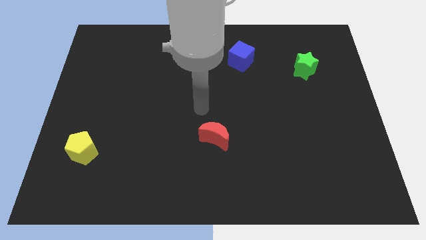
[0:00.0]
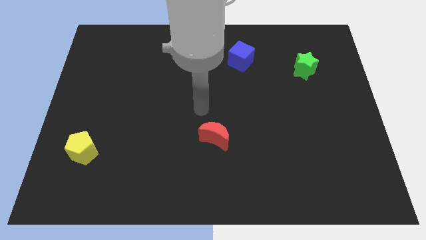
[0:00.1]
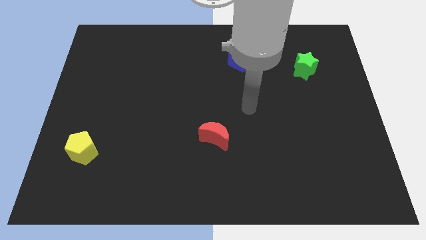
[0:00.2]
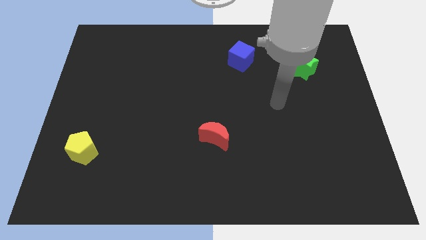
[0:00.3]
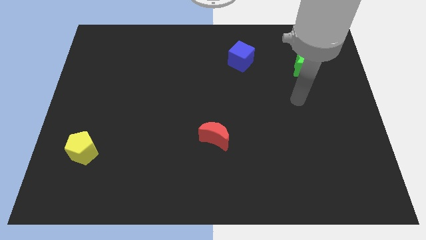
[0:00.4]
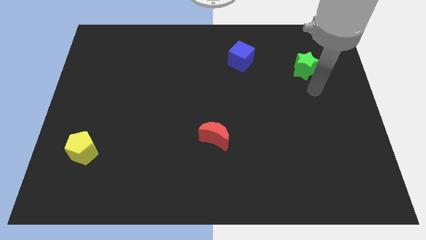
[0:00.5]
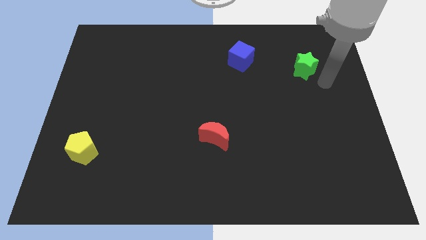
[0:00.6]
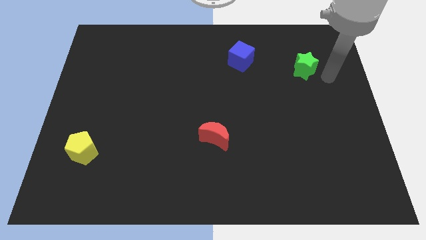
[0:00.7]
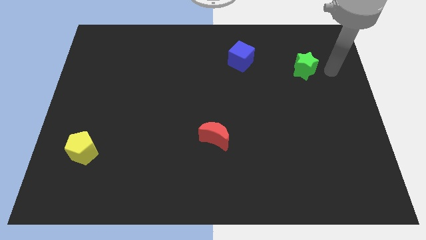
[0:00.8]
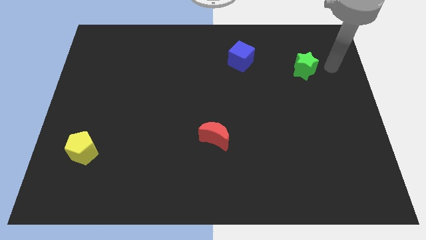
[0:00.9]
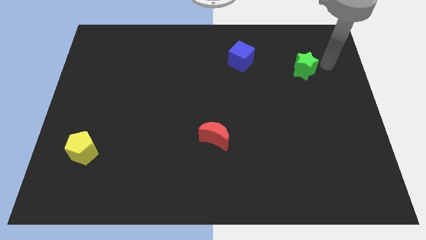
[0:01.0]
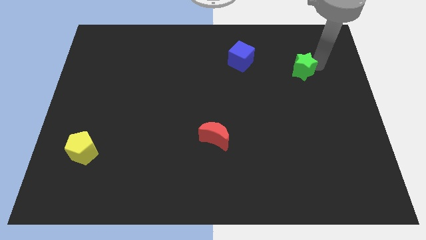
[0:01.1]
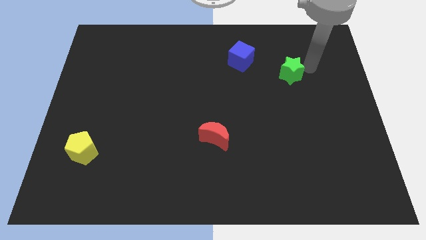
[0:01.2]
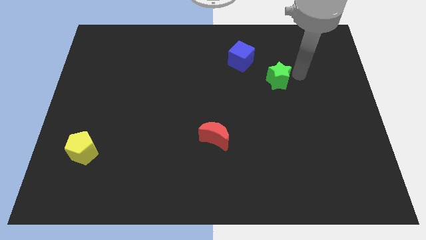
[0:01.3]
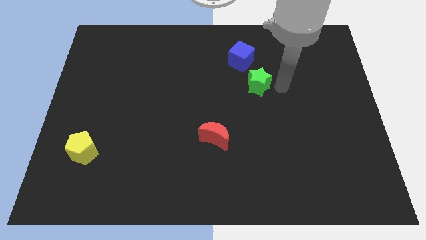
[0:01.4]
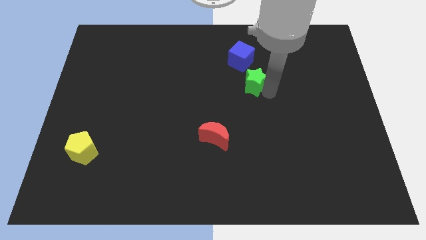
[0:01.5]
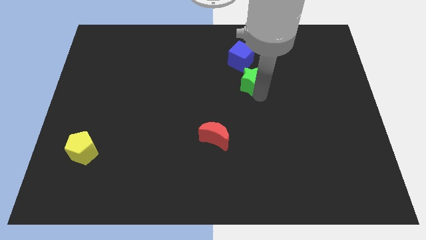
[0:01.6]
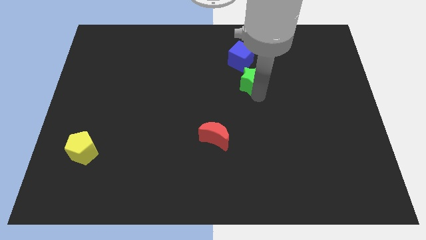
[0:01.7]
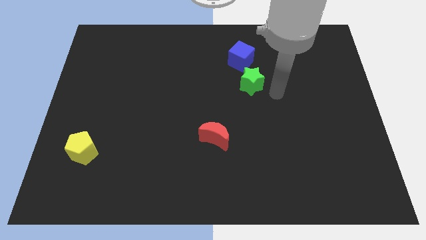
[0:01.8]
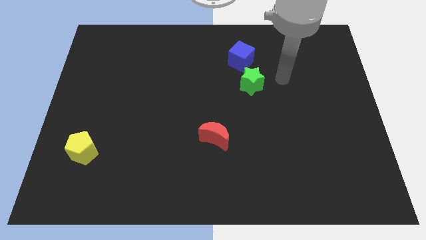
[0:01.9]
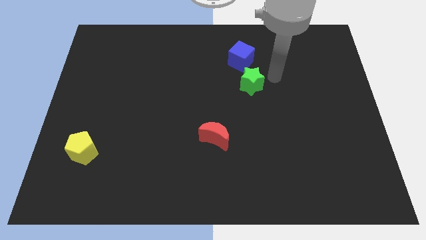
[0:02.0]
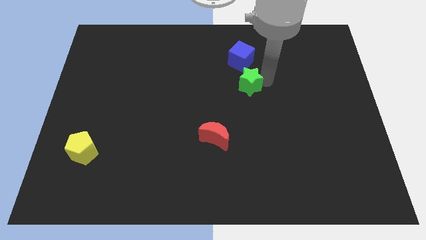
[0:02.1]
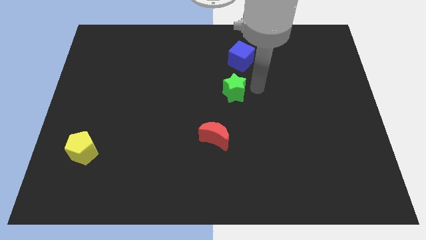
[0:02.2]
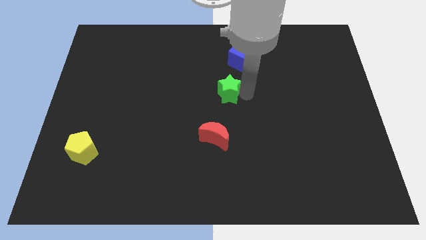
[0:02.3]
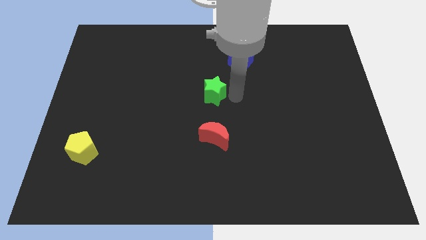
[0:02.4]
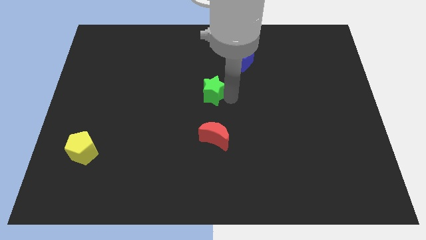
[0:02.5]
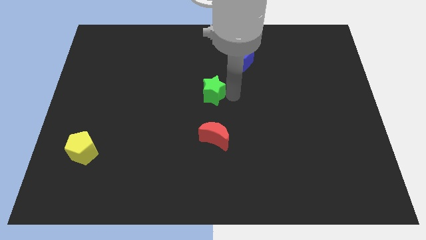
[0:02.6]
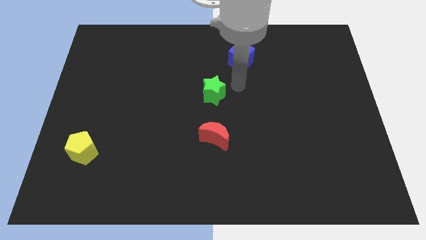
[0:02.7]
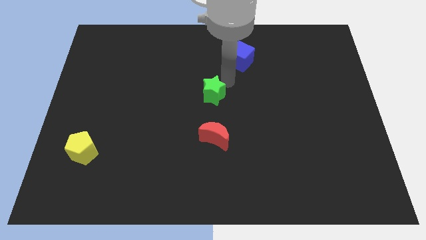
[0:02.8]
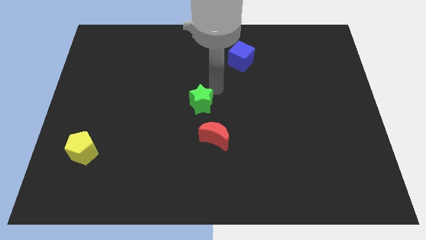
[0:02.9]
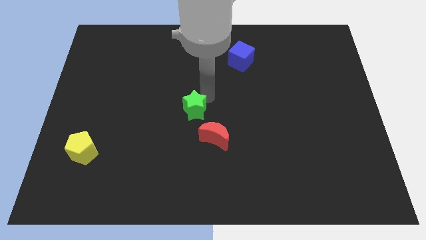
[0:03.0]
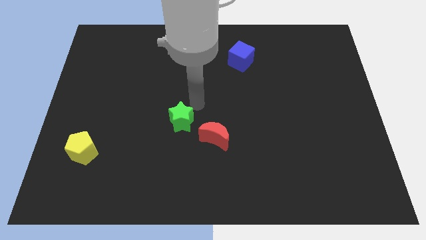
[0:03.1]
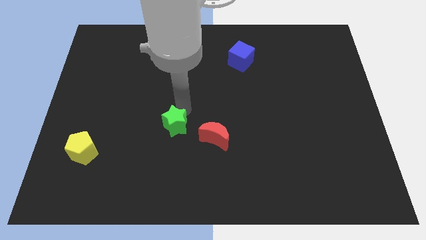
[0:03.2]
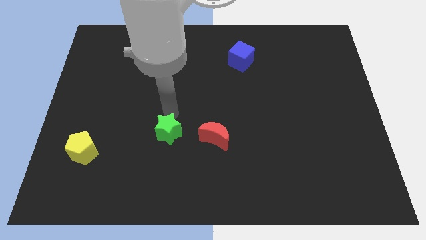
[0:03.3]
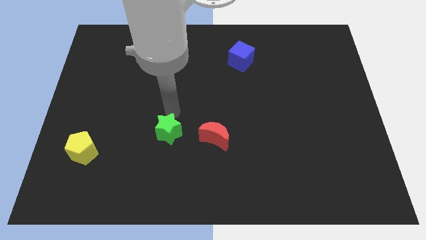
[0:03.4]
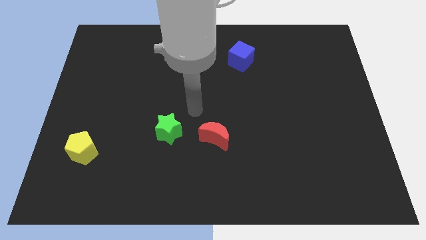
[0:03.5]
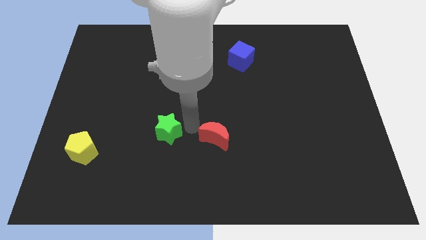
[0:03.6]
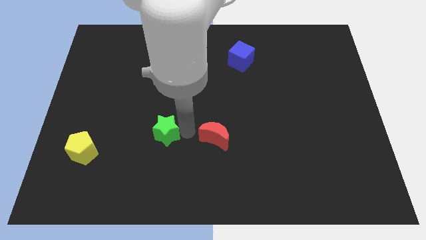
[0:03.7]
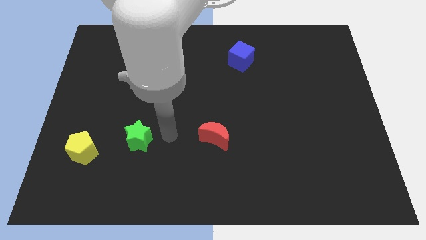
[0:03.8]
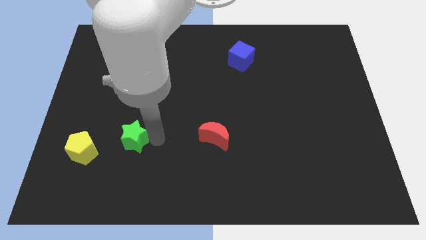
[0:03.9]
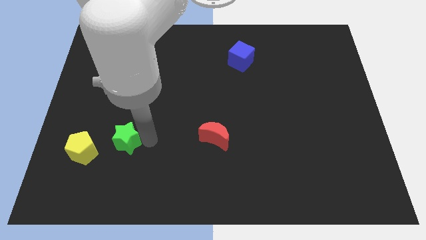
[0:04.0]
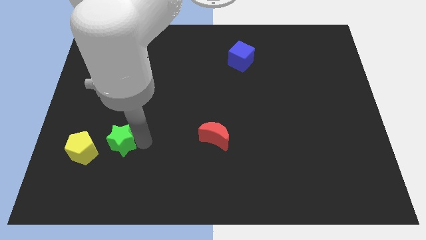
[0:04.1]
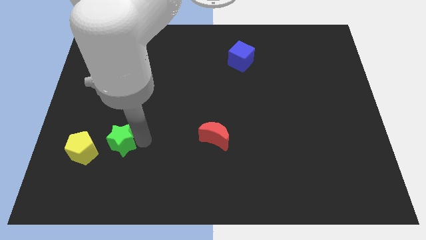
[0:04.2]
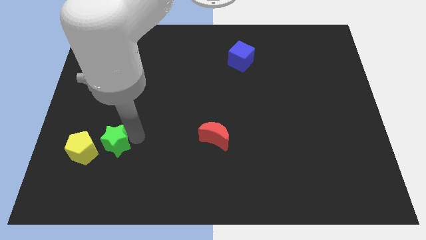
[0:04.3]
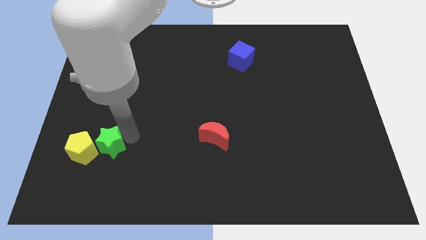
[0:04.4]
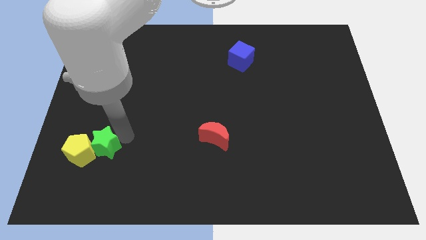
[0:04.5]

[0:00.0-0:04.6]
push the green star close to the yellow pentagon

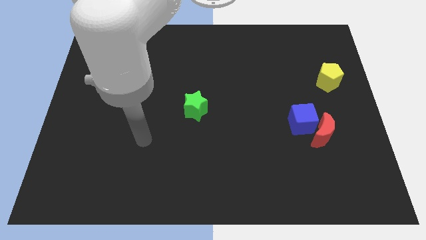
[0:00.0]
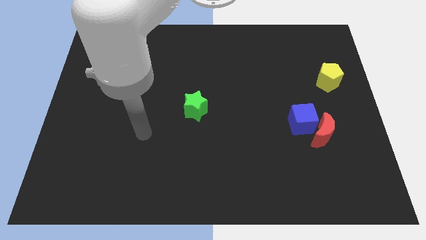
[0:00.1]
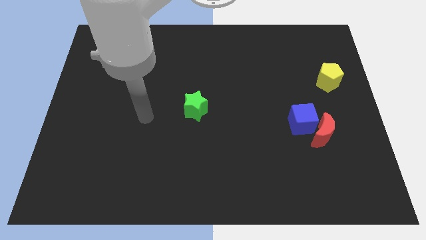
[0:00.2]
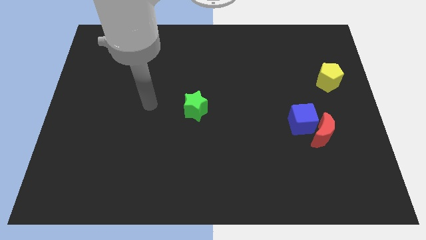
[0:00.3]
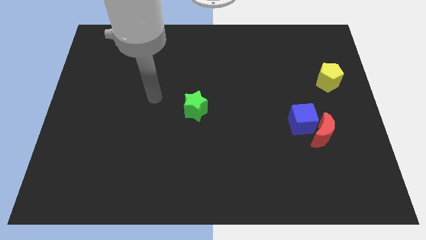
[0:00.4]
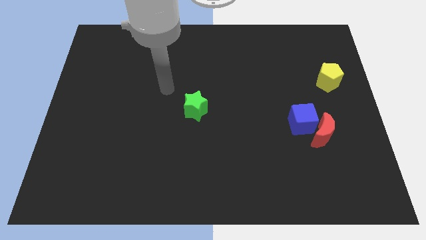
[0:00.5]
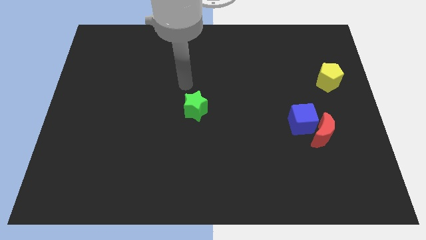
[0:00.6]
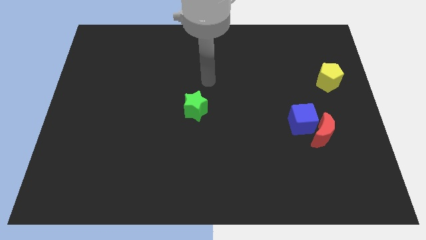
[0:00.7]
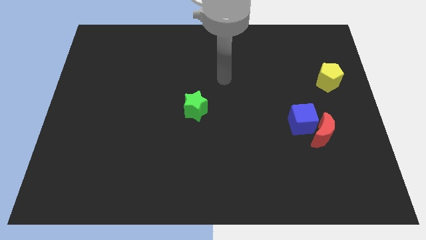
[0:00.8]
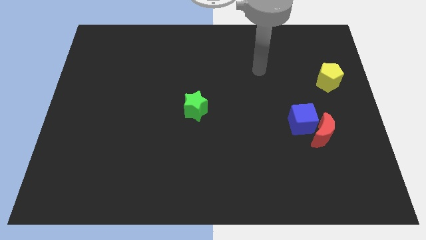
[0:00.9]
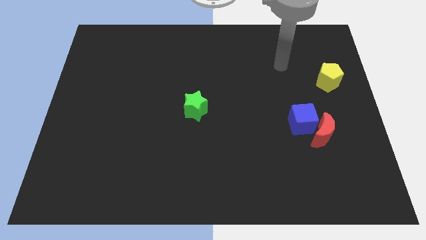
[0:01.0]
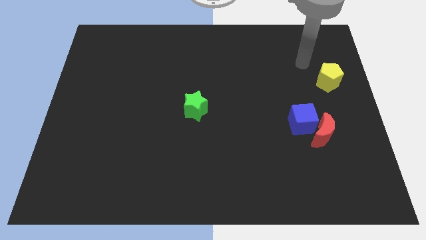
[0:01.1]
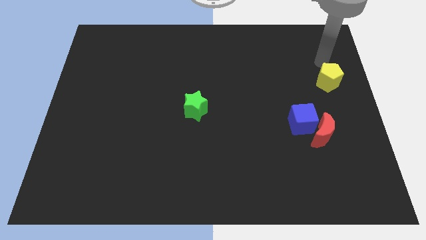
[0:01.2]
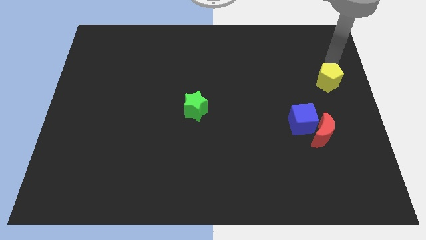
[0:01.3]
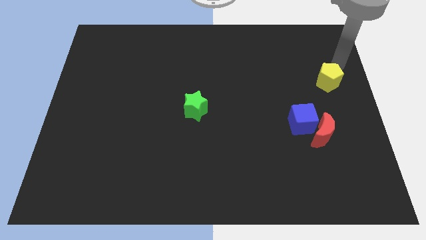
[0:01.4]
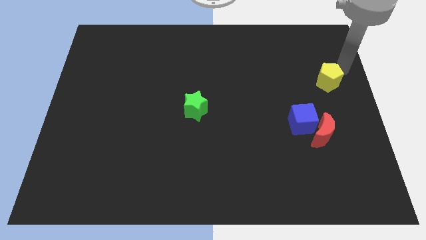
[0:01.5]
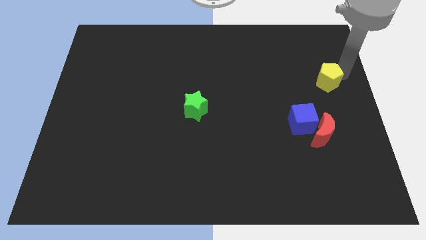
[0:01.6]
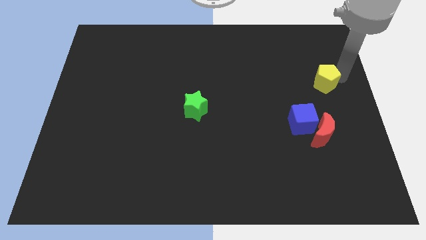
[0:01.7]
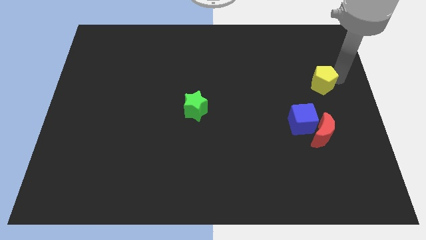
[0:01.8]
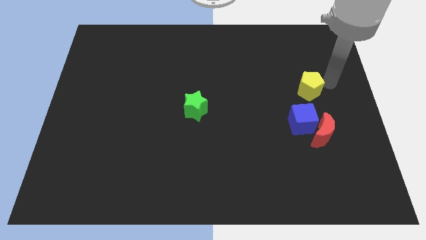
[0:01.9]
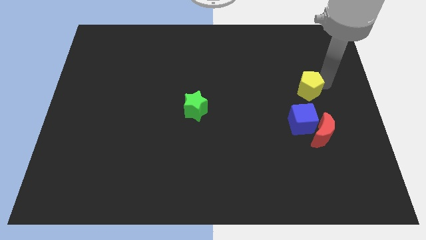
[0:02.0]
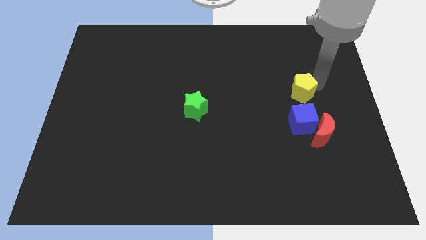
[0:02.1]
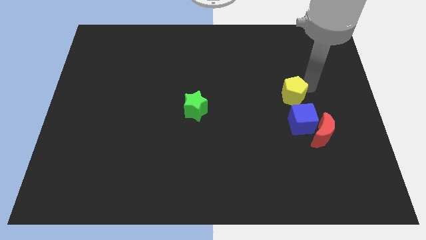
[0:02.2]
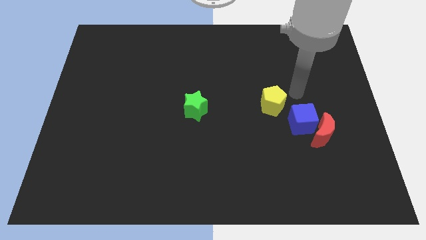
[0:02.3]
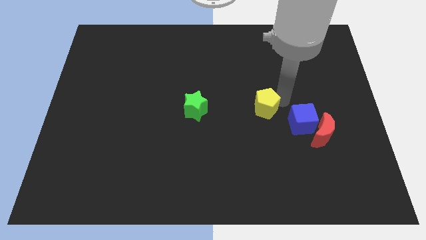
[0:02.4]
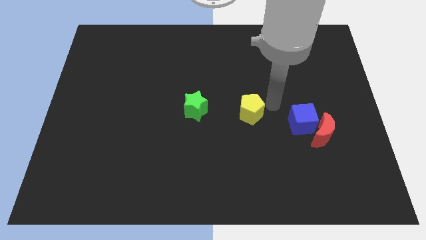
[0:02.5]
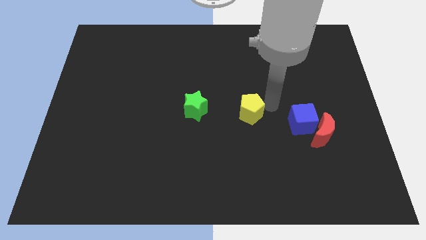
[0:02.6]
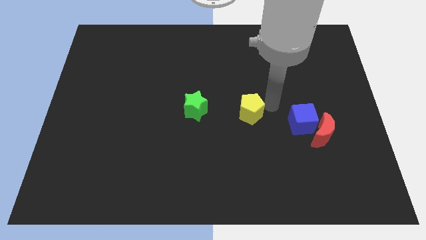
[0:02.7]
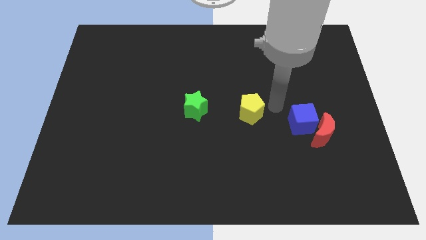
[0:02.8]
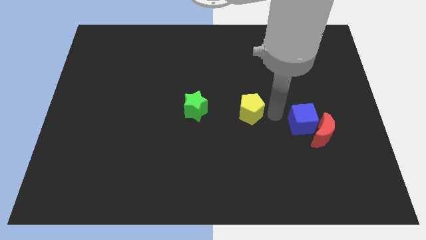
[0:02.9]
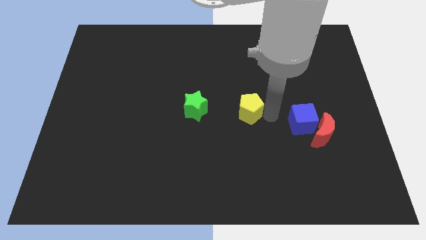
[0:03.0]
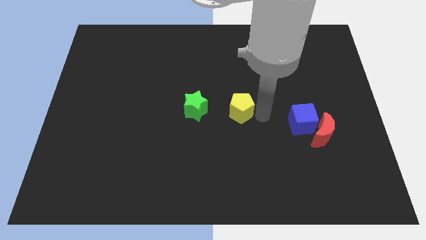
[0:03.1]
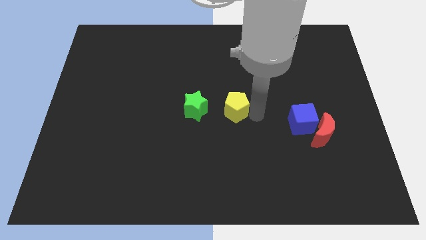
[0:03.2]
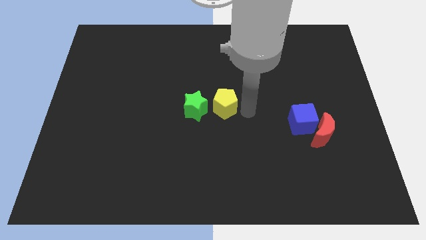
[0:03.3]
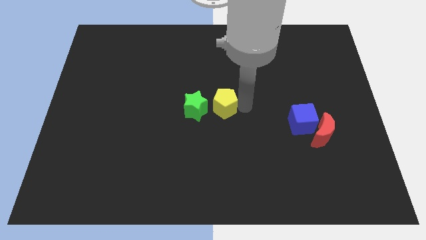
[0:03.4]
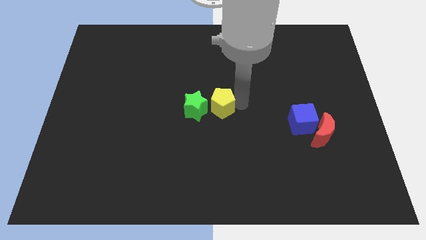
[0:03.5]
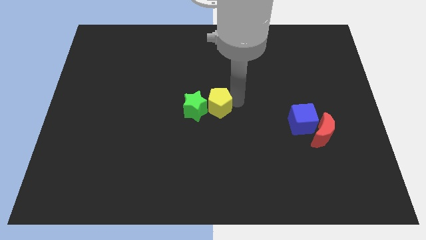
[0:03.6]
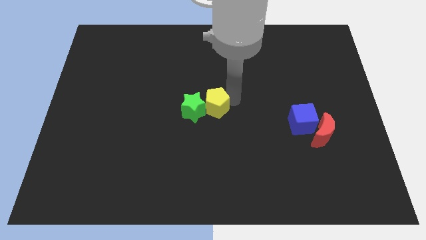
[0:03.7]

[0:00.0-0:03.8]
move the yellow pentagon close to the star

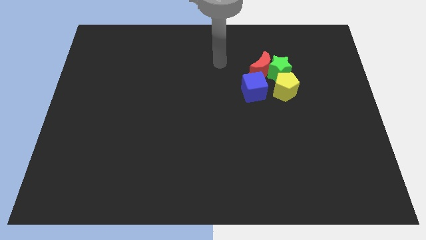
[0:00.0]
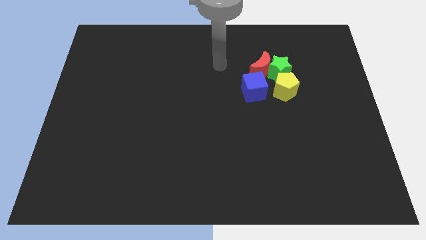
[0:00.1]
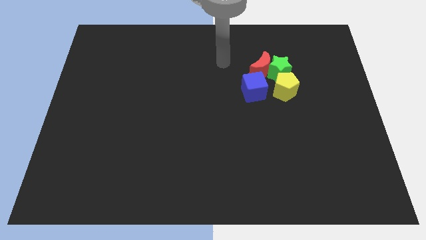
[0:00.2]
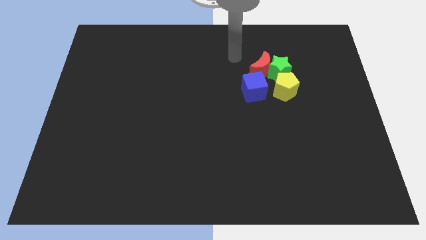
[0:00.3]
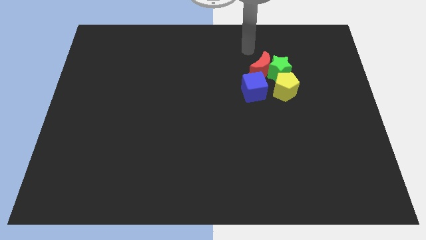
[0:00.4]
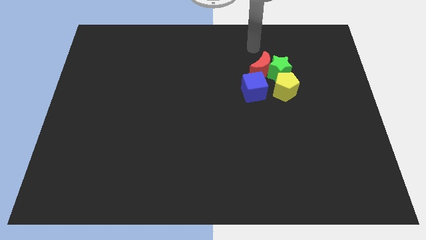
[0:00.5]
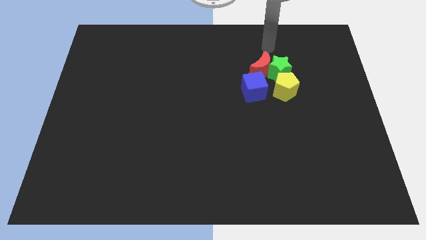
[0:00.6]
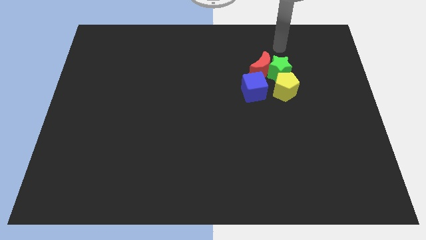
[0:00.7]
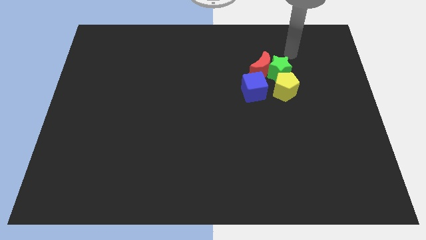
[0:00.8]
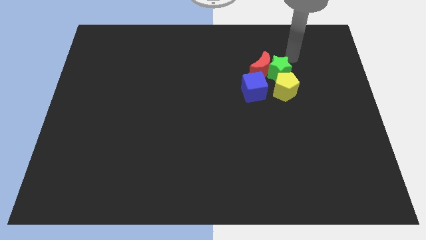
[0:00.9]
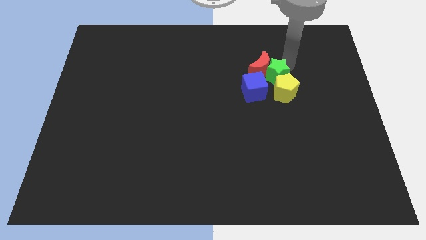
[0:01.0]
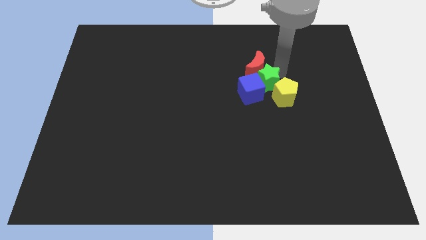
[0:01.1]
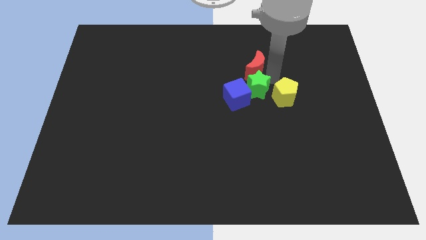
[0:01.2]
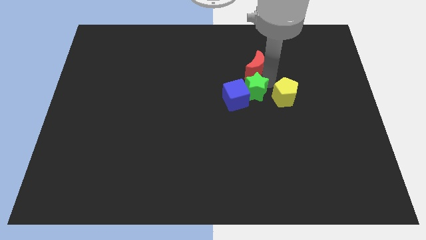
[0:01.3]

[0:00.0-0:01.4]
slide the green block next to the blue block
